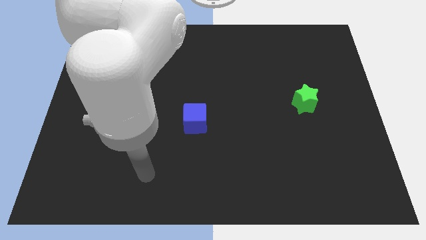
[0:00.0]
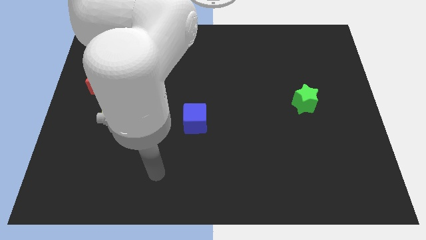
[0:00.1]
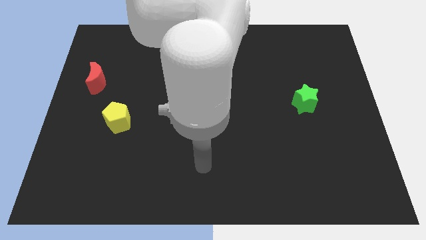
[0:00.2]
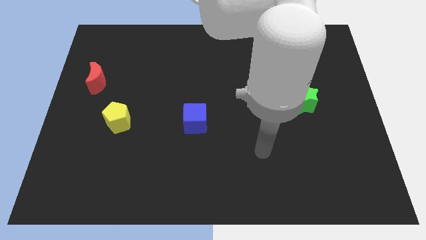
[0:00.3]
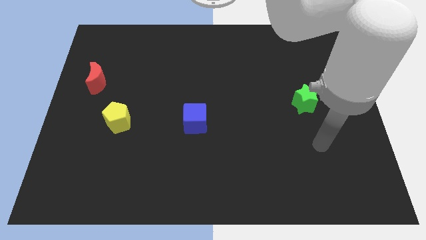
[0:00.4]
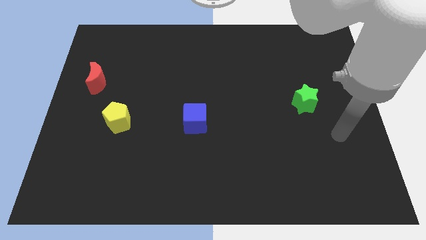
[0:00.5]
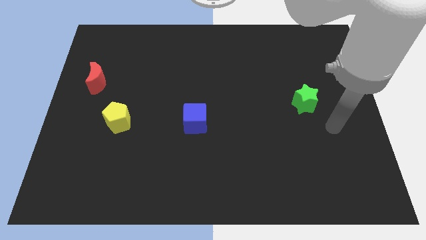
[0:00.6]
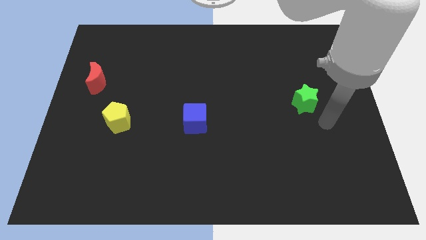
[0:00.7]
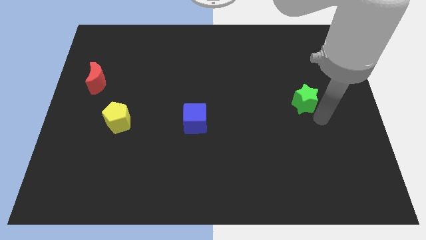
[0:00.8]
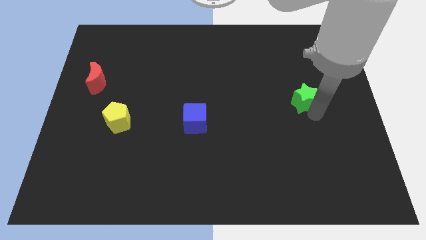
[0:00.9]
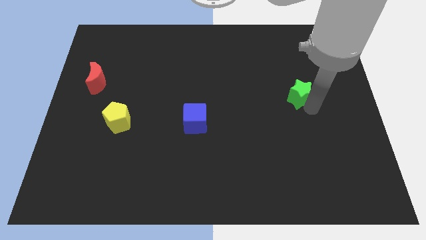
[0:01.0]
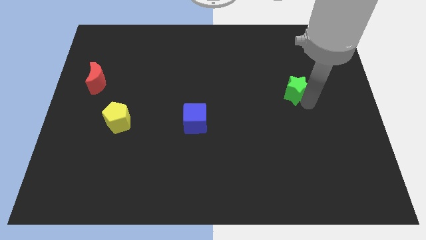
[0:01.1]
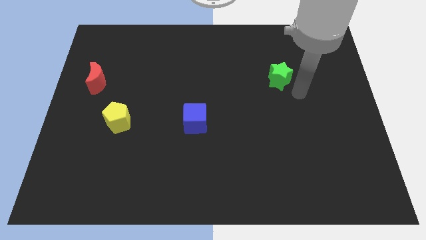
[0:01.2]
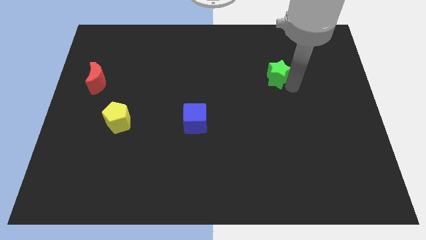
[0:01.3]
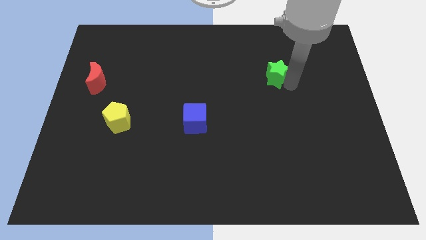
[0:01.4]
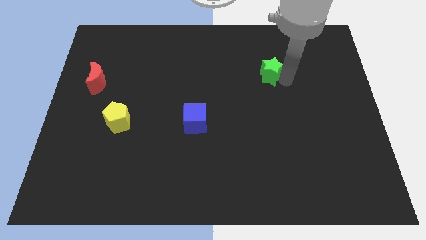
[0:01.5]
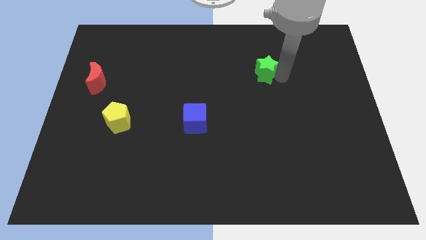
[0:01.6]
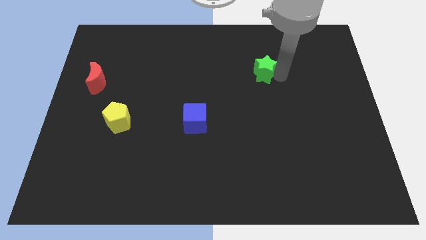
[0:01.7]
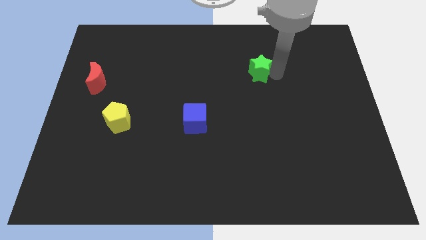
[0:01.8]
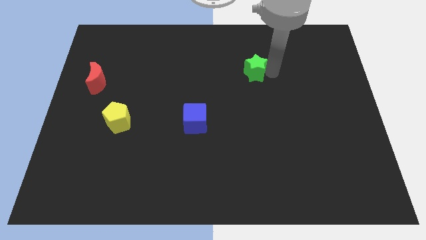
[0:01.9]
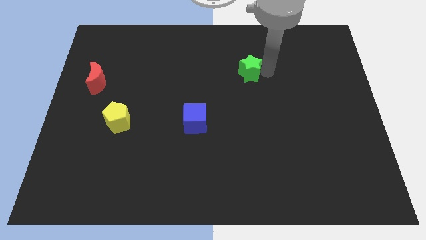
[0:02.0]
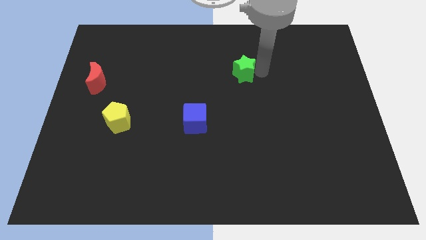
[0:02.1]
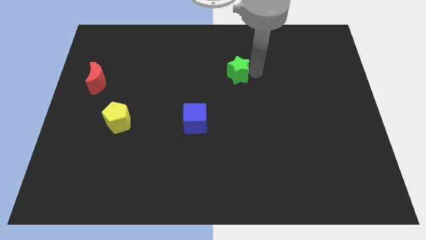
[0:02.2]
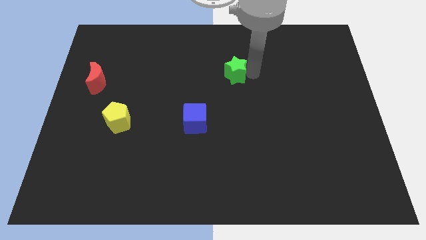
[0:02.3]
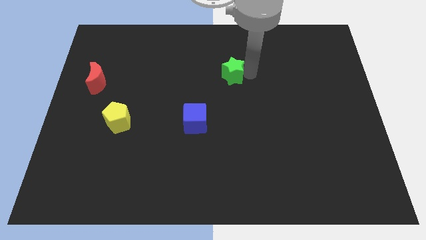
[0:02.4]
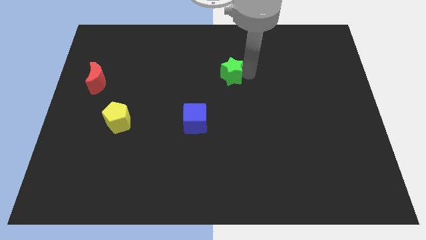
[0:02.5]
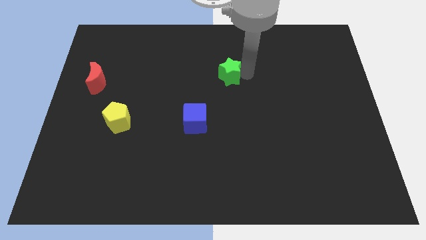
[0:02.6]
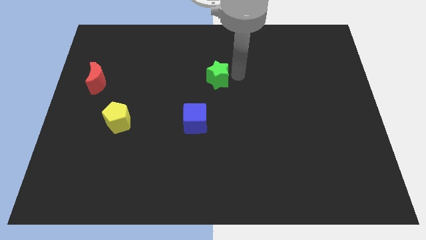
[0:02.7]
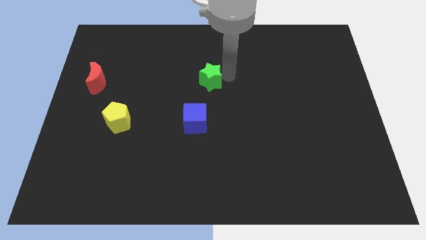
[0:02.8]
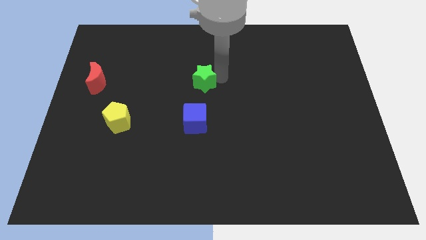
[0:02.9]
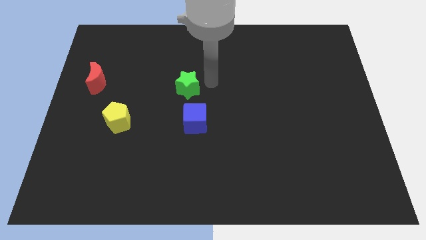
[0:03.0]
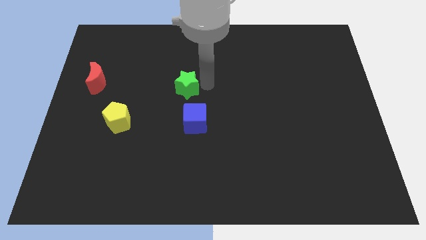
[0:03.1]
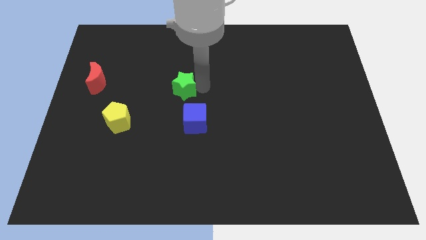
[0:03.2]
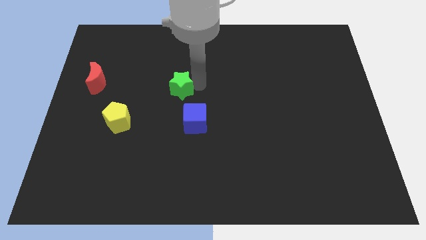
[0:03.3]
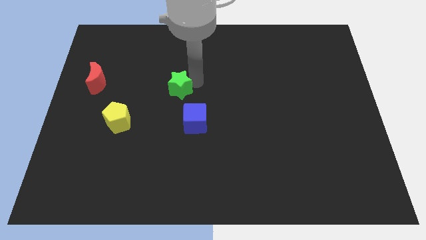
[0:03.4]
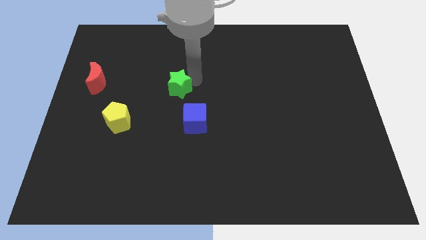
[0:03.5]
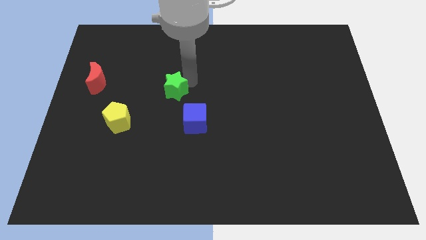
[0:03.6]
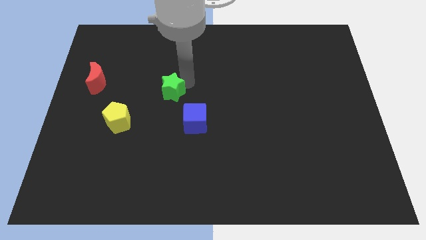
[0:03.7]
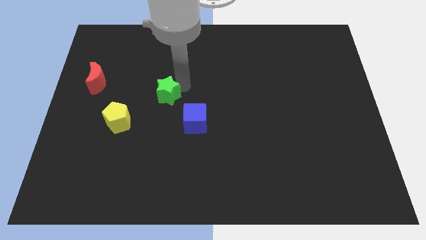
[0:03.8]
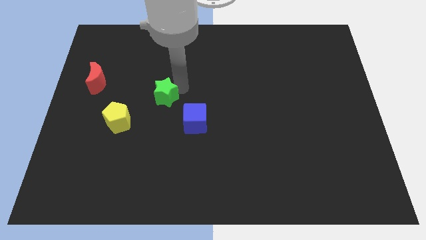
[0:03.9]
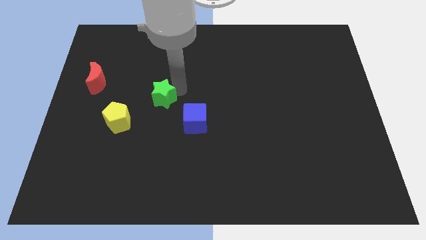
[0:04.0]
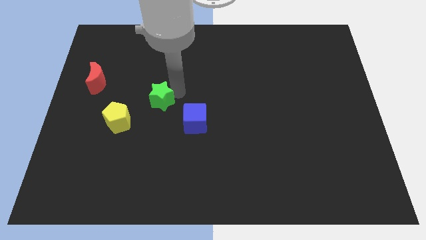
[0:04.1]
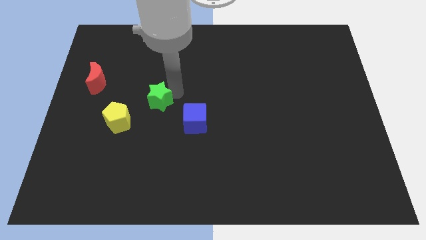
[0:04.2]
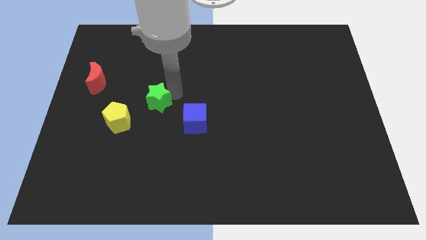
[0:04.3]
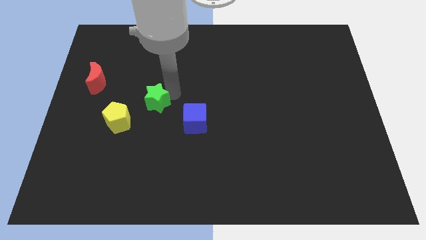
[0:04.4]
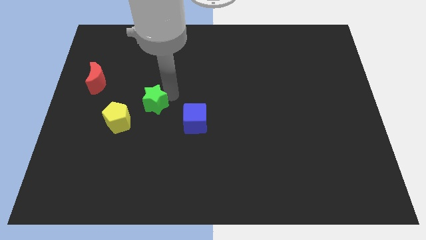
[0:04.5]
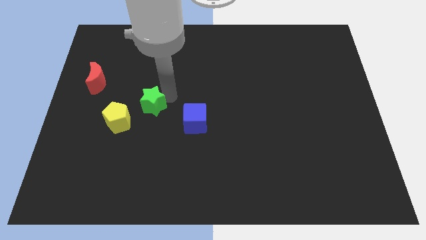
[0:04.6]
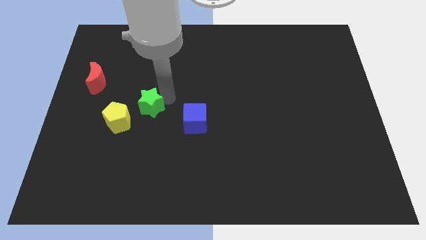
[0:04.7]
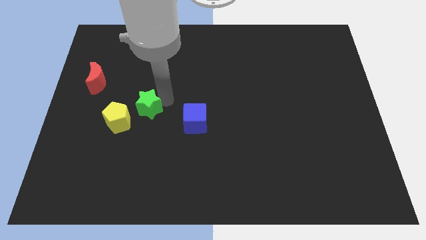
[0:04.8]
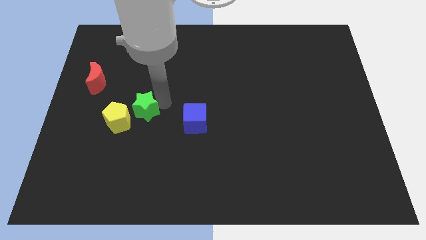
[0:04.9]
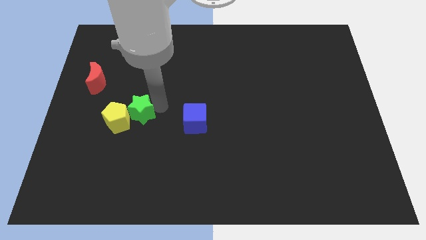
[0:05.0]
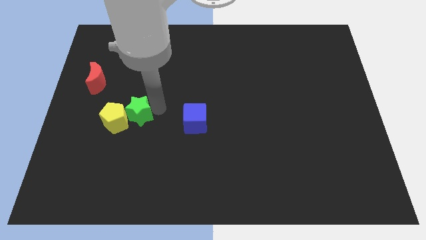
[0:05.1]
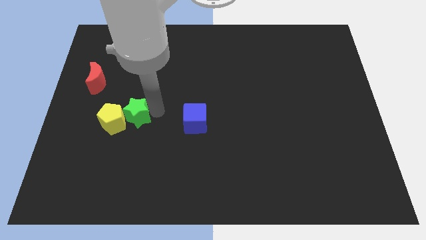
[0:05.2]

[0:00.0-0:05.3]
move the green block towards the yellow pentagon

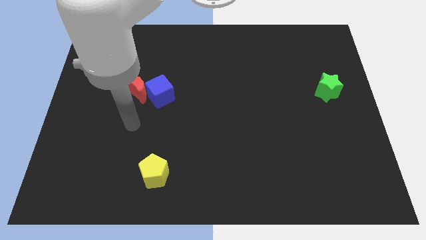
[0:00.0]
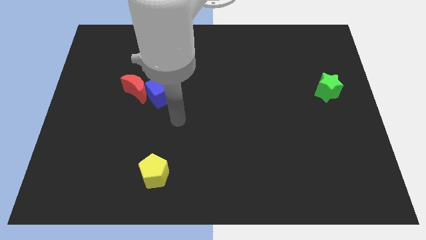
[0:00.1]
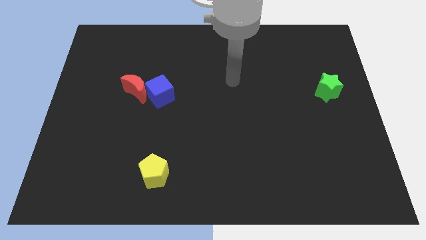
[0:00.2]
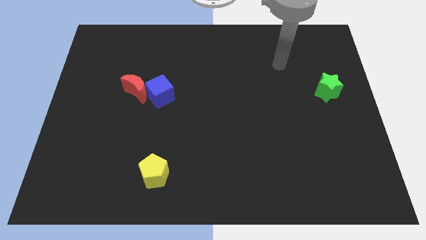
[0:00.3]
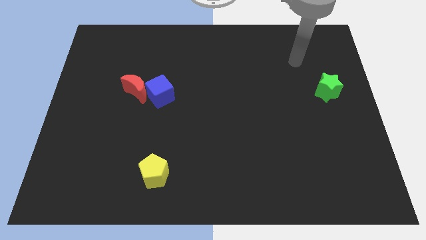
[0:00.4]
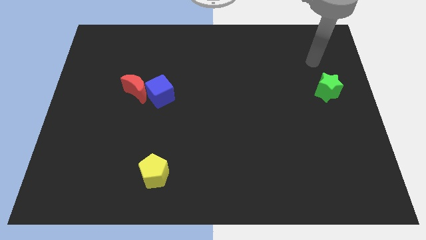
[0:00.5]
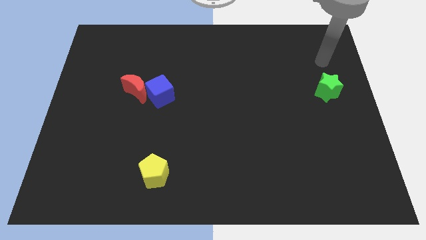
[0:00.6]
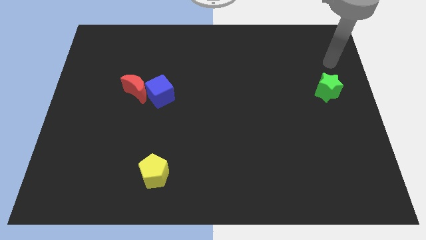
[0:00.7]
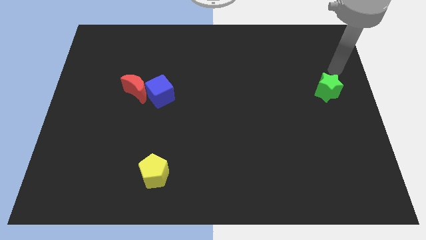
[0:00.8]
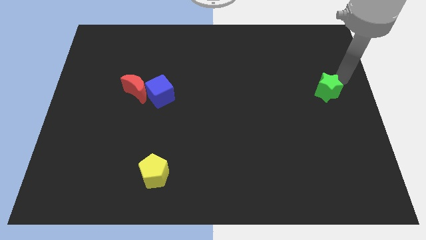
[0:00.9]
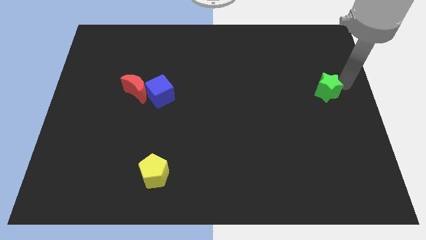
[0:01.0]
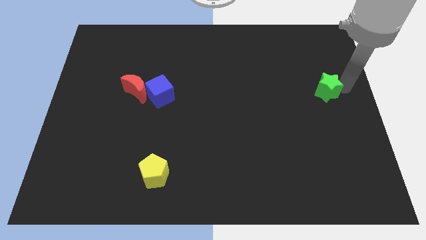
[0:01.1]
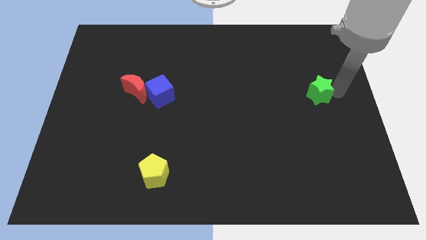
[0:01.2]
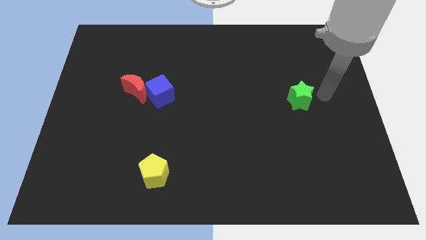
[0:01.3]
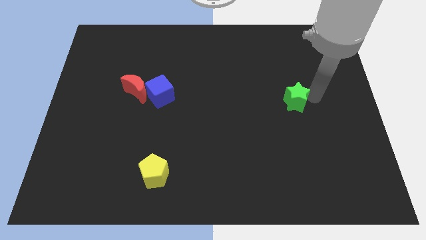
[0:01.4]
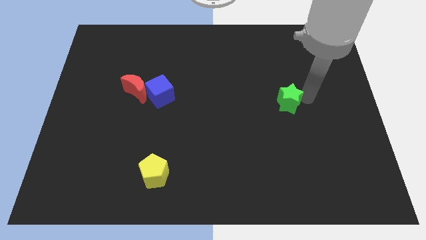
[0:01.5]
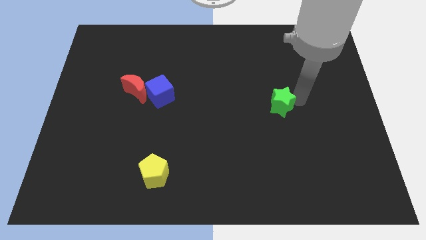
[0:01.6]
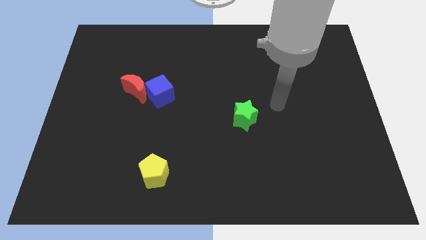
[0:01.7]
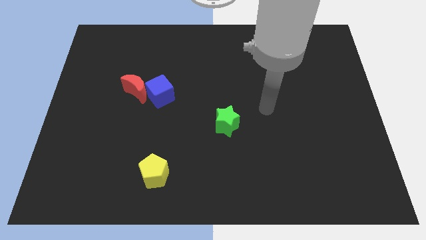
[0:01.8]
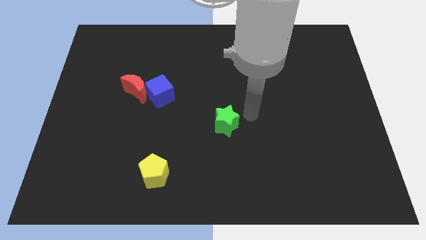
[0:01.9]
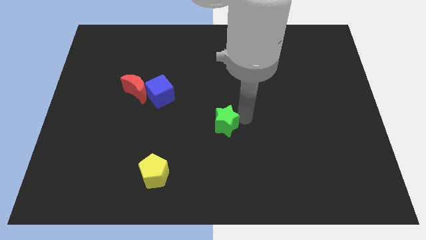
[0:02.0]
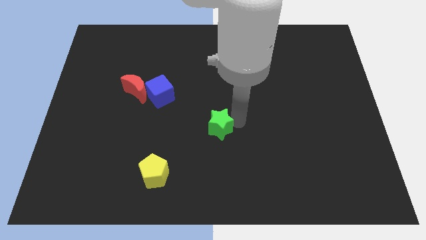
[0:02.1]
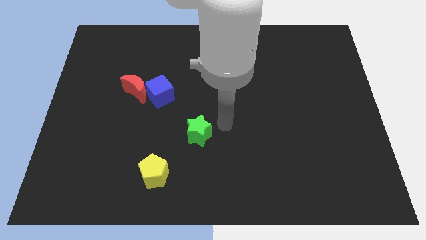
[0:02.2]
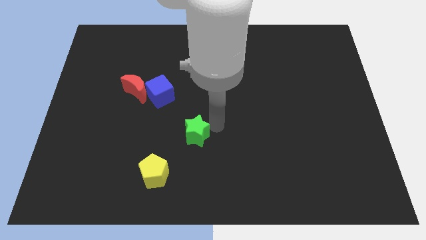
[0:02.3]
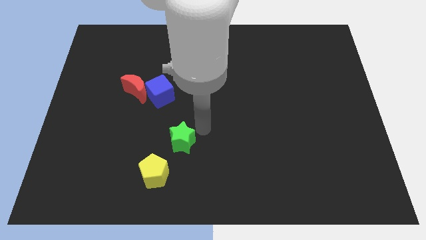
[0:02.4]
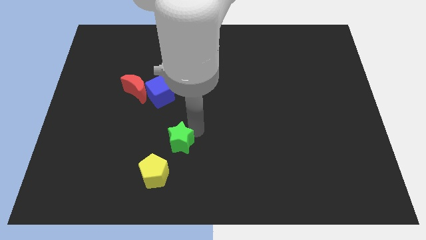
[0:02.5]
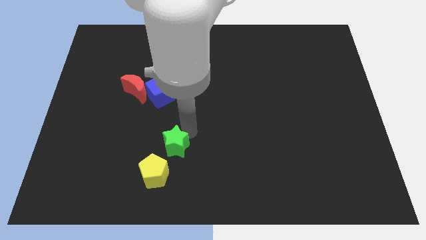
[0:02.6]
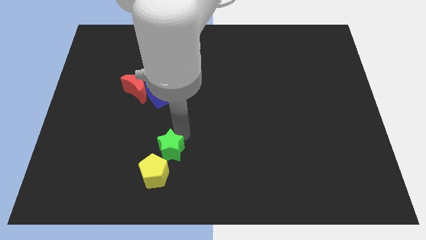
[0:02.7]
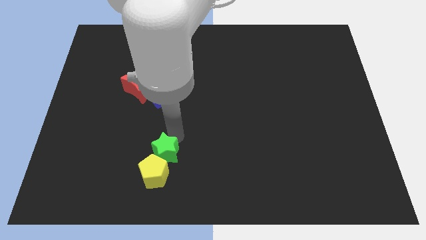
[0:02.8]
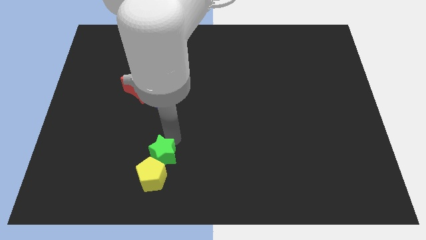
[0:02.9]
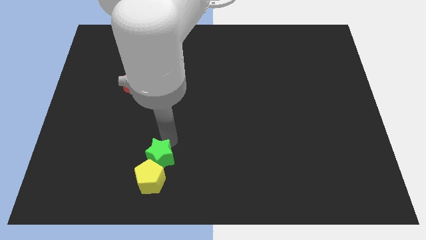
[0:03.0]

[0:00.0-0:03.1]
move the green block close to the pentagon
